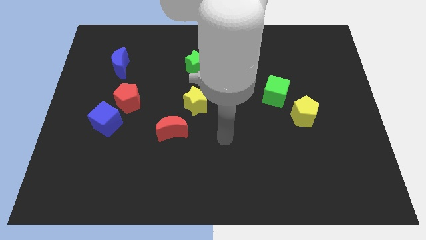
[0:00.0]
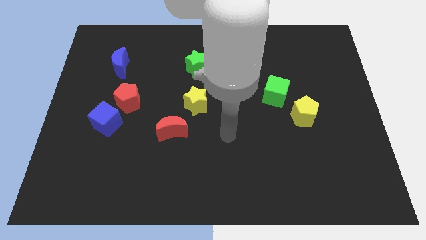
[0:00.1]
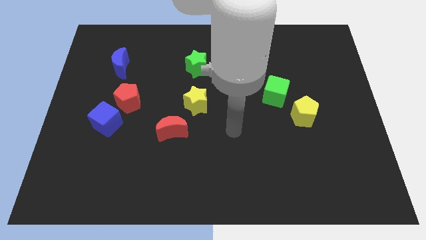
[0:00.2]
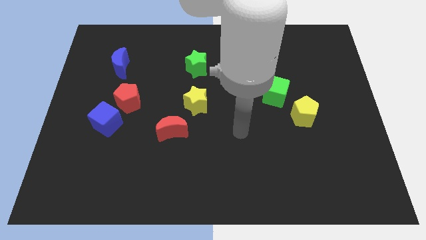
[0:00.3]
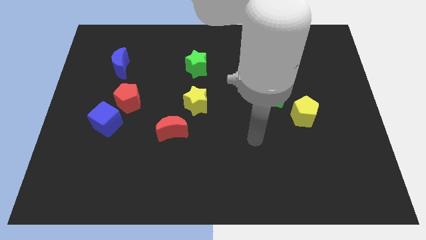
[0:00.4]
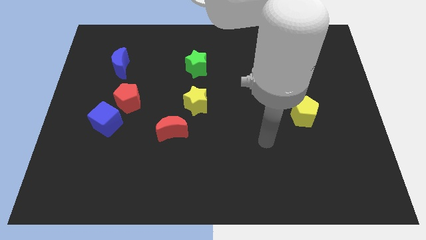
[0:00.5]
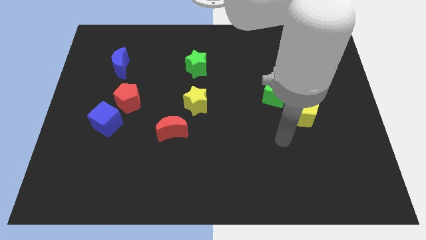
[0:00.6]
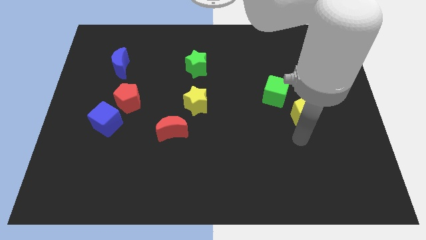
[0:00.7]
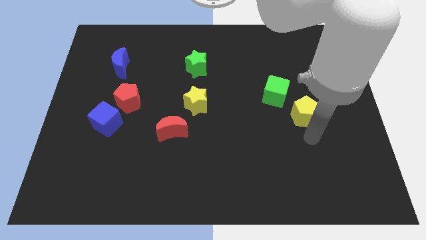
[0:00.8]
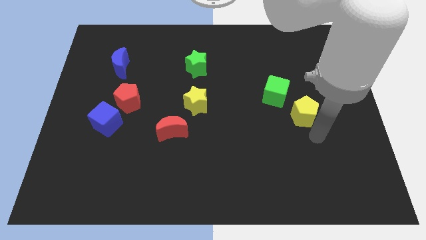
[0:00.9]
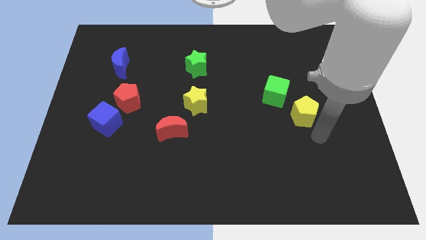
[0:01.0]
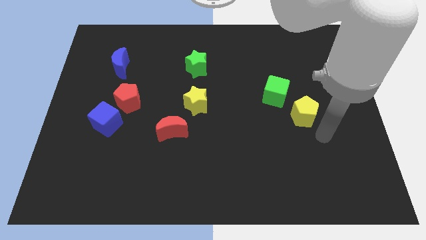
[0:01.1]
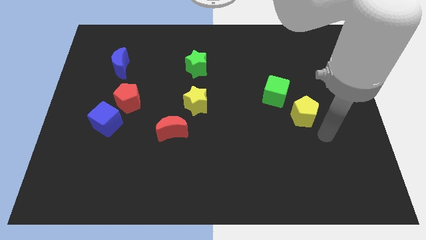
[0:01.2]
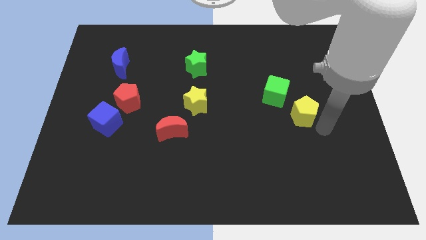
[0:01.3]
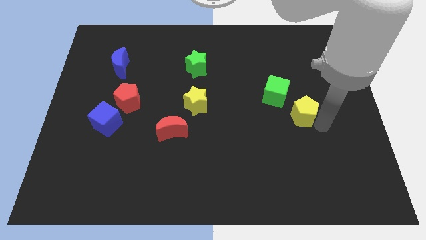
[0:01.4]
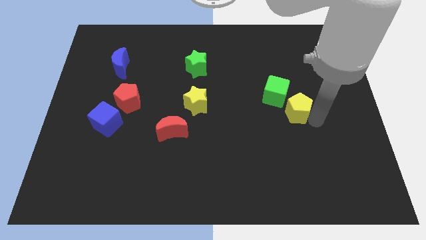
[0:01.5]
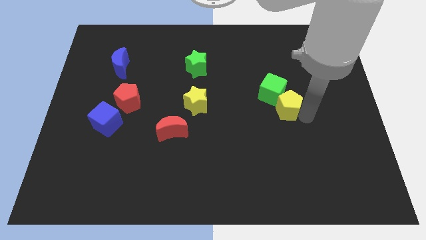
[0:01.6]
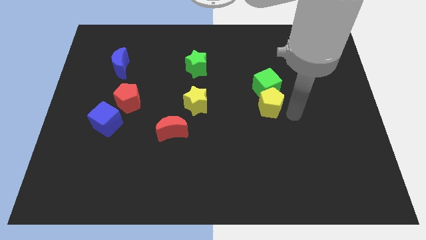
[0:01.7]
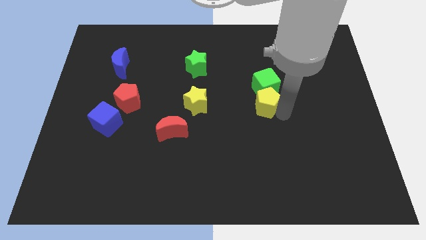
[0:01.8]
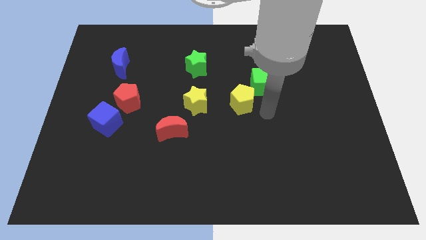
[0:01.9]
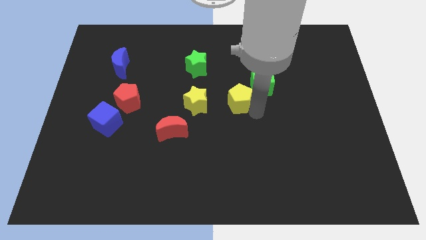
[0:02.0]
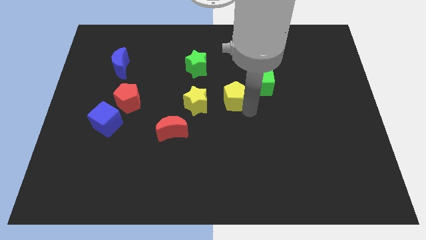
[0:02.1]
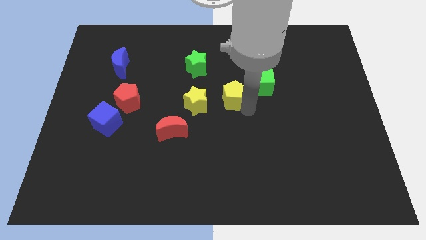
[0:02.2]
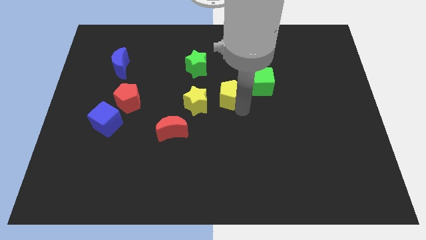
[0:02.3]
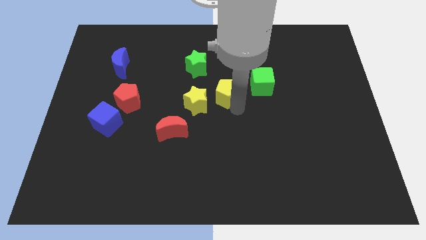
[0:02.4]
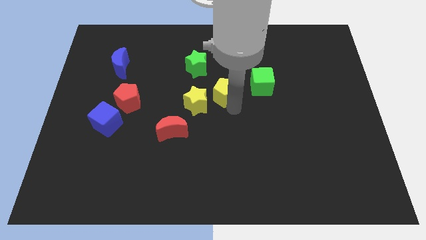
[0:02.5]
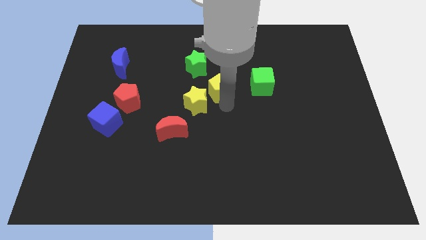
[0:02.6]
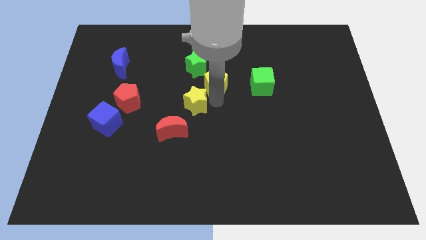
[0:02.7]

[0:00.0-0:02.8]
move the yellow pentagon between green and yellow star at the center

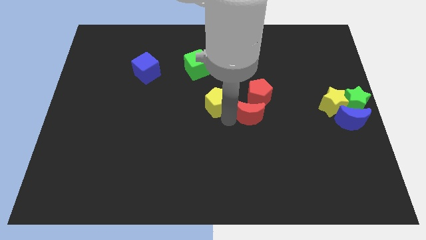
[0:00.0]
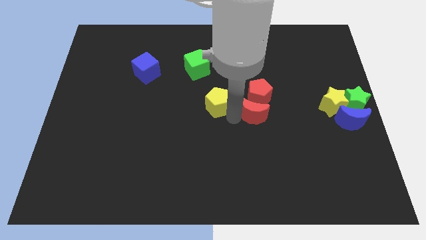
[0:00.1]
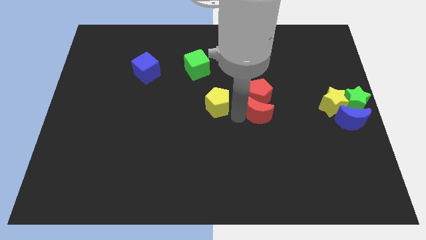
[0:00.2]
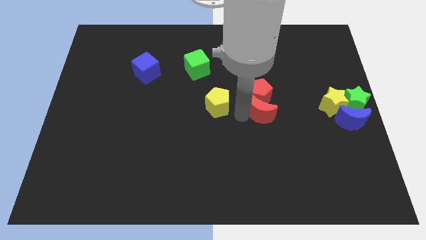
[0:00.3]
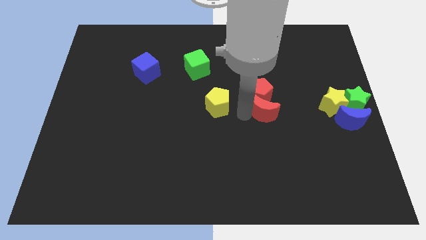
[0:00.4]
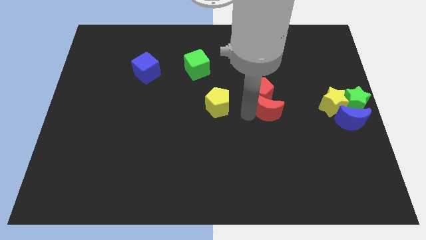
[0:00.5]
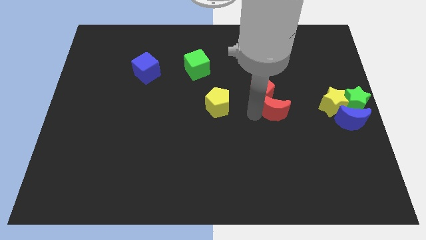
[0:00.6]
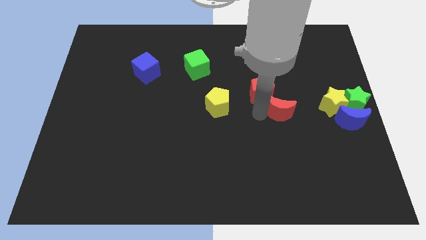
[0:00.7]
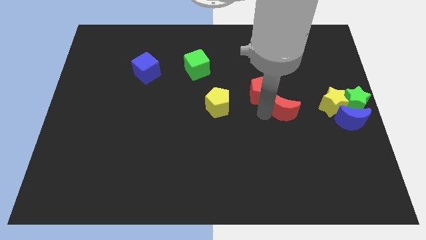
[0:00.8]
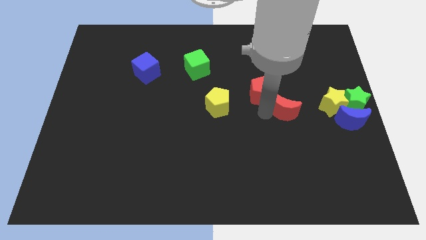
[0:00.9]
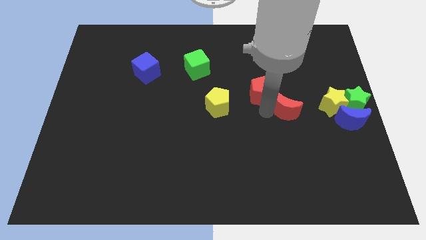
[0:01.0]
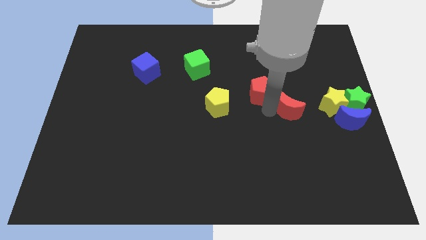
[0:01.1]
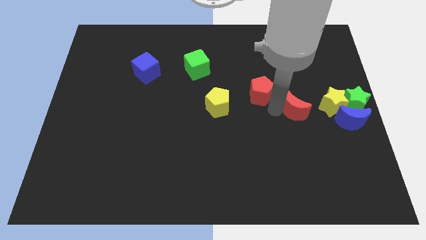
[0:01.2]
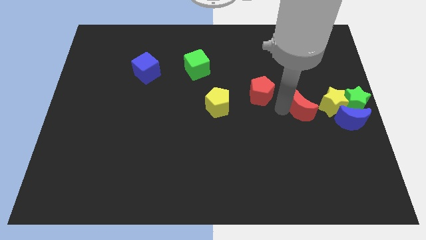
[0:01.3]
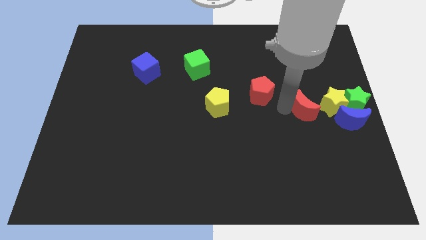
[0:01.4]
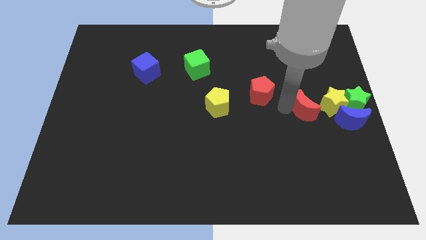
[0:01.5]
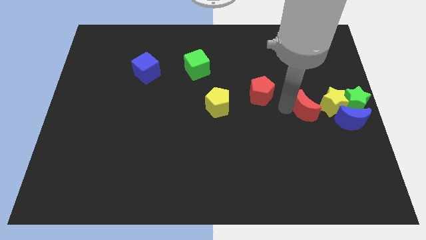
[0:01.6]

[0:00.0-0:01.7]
drag the red crescent diagonally bottom right to the red pentagon

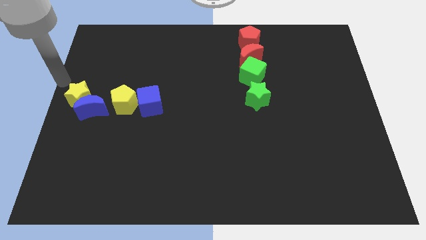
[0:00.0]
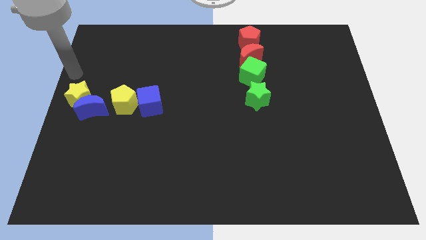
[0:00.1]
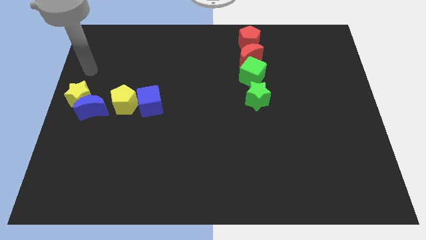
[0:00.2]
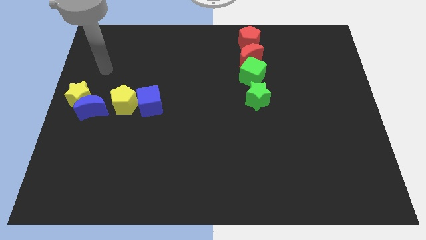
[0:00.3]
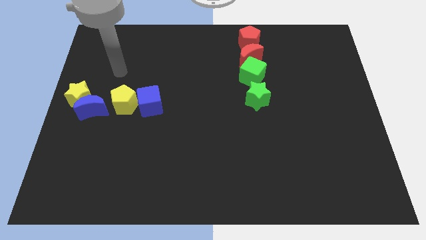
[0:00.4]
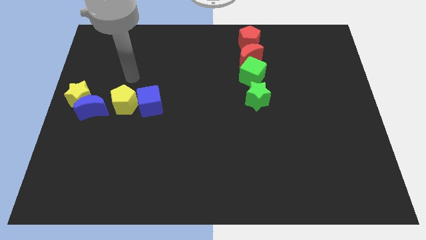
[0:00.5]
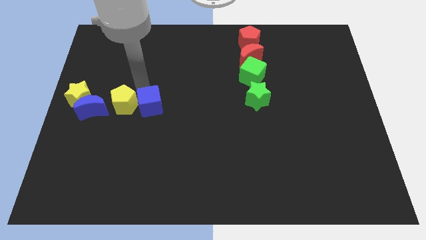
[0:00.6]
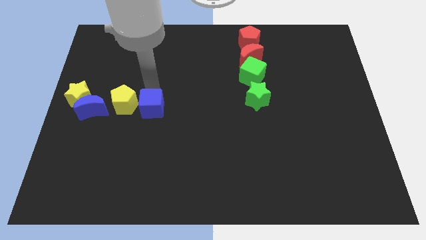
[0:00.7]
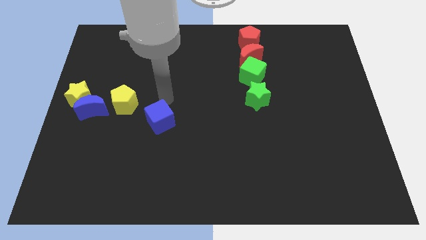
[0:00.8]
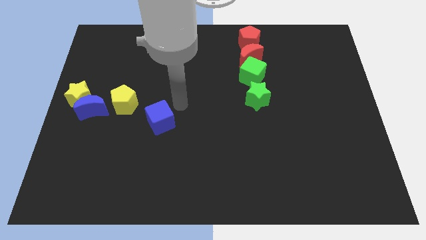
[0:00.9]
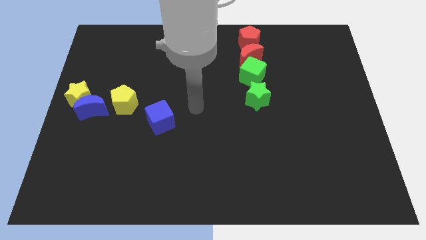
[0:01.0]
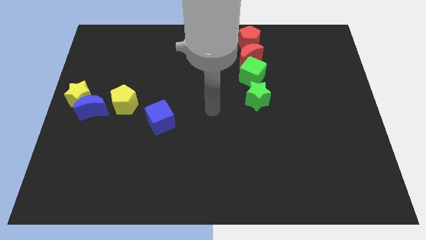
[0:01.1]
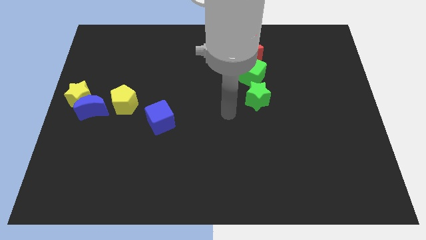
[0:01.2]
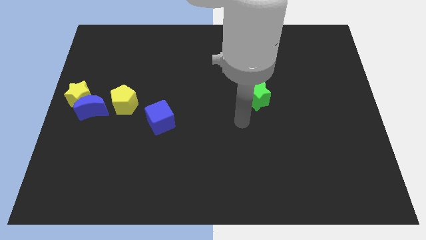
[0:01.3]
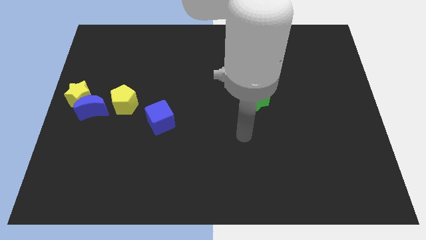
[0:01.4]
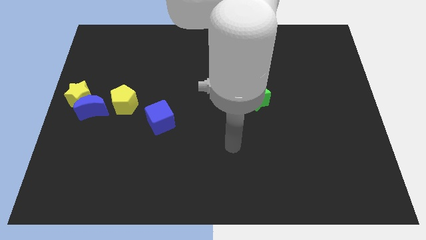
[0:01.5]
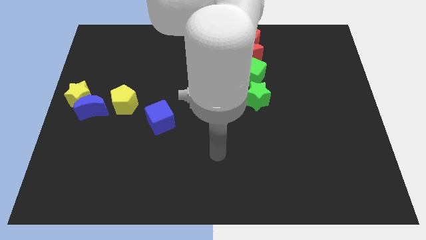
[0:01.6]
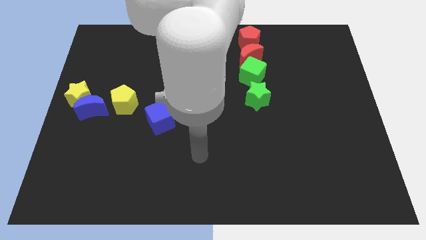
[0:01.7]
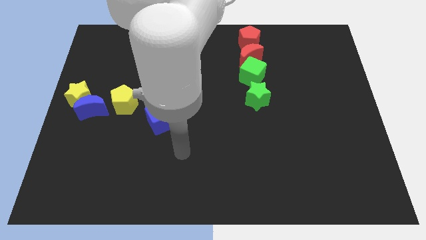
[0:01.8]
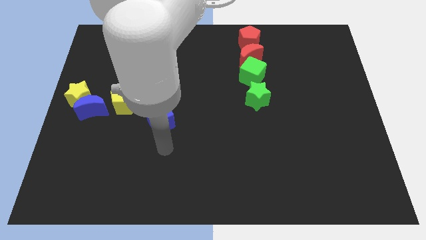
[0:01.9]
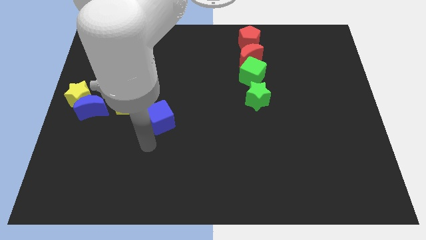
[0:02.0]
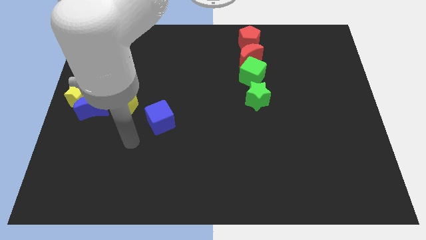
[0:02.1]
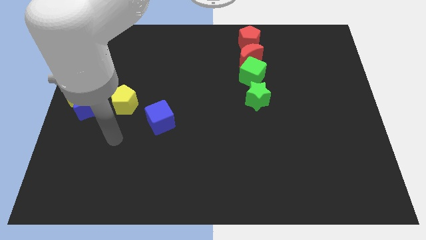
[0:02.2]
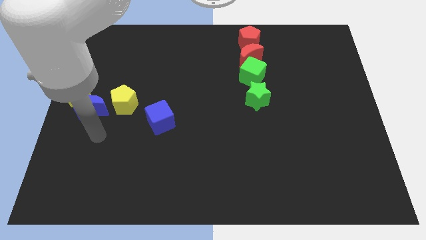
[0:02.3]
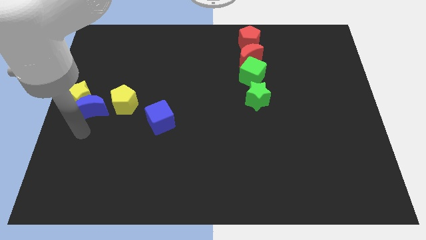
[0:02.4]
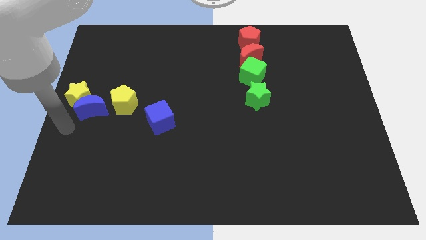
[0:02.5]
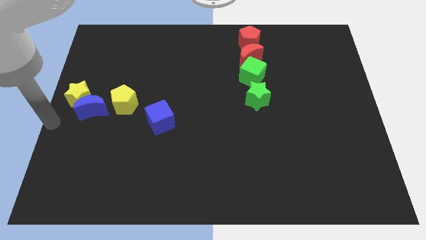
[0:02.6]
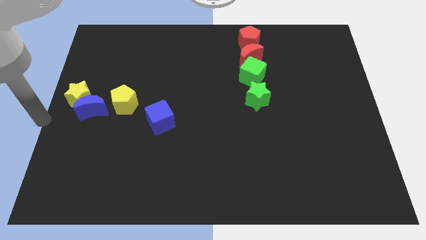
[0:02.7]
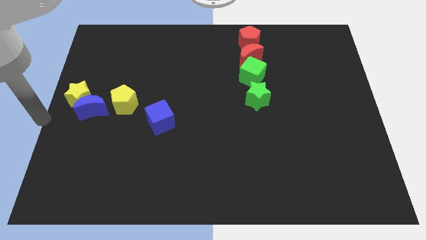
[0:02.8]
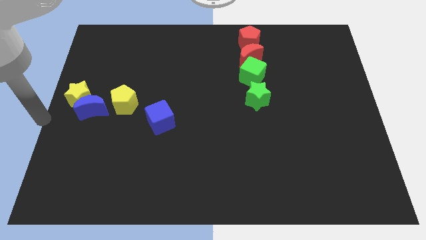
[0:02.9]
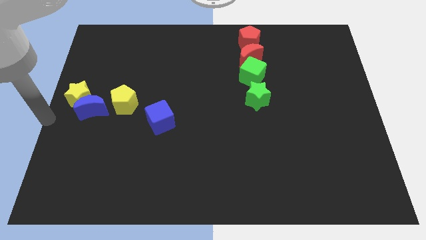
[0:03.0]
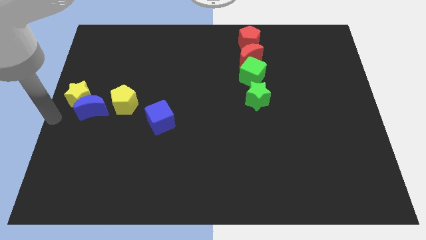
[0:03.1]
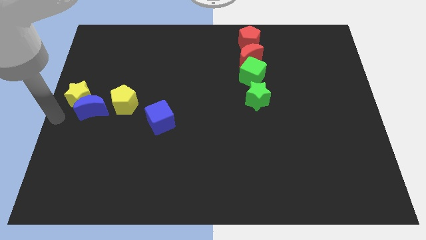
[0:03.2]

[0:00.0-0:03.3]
separate yellow pentagon from the blue cube

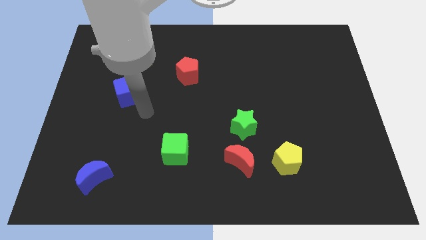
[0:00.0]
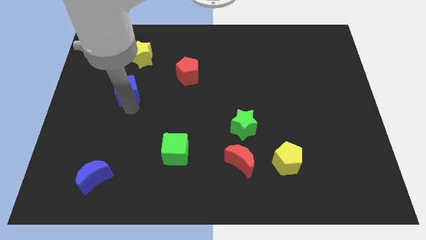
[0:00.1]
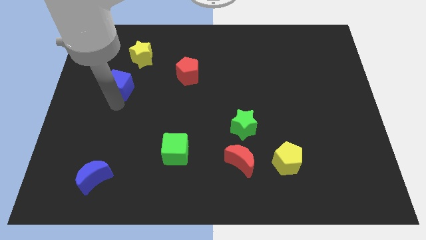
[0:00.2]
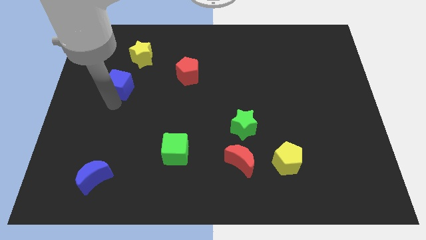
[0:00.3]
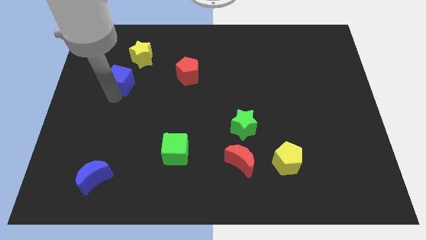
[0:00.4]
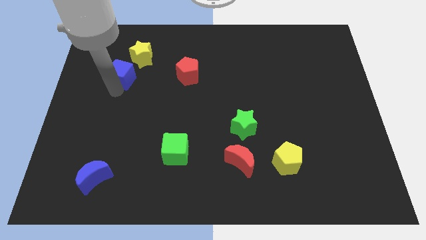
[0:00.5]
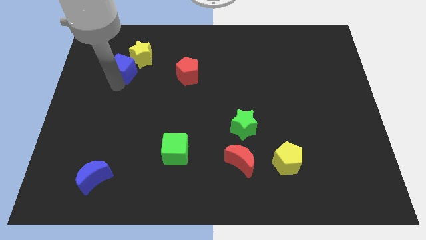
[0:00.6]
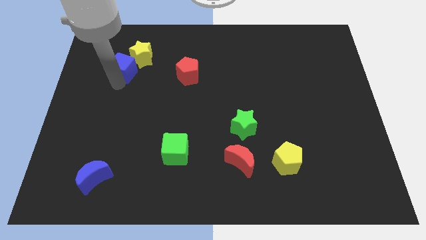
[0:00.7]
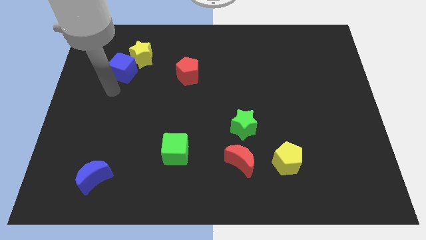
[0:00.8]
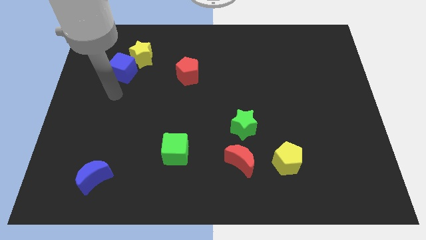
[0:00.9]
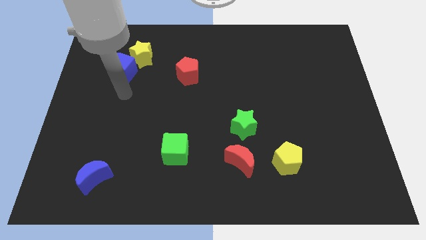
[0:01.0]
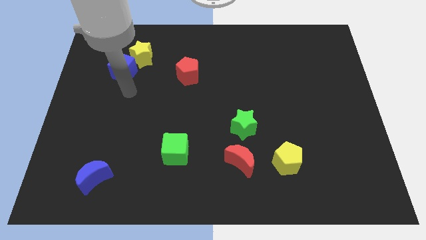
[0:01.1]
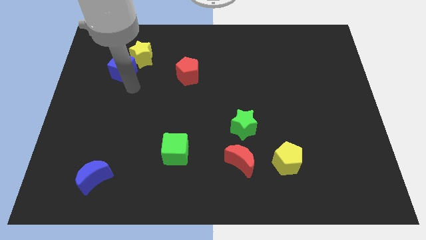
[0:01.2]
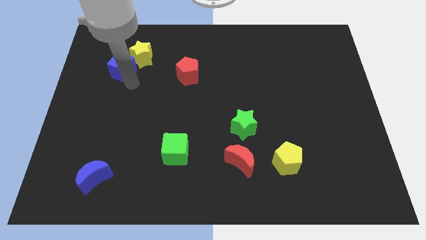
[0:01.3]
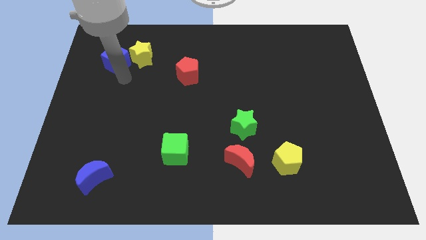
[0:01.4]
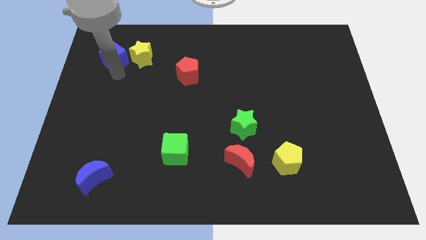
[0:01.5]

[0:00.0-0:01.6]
place the blue cube to the left side of the yellow star
